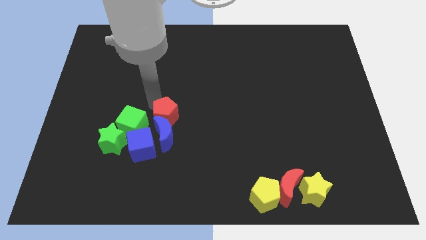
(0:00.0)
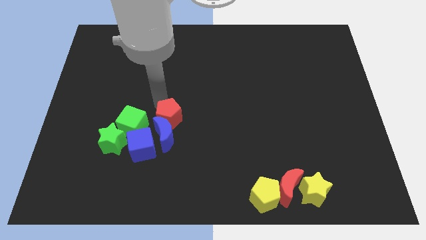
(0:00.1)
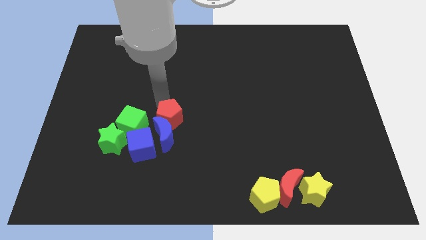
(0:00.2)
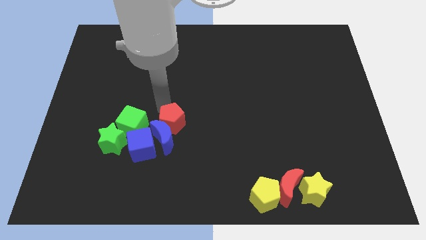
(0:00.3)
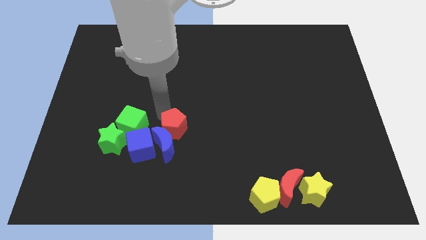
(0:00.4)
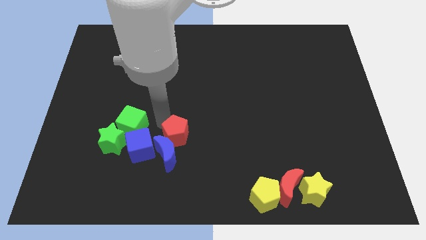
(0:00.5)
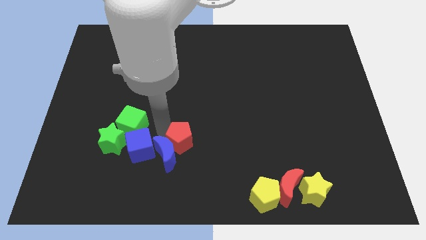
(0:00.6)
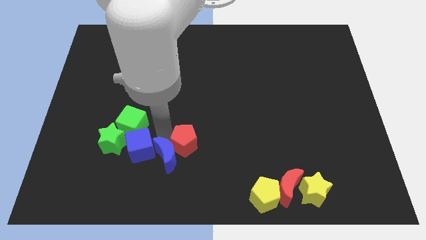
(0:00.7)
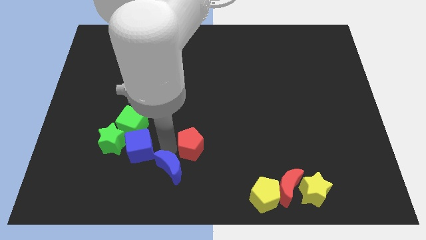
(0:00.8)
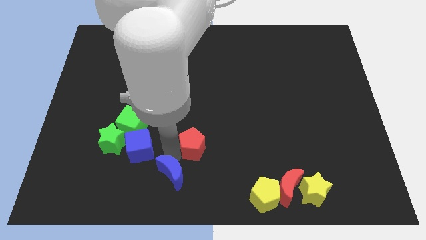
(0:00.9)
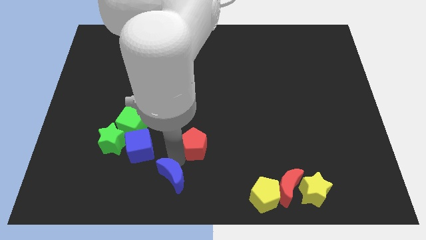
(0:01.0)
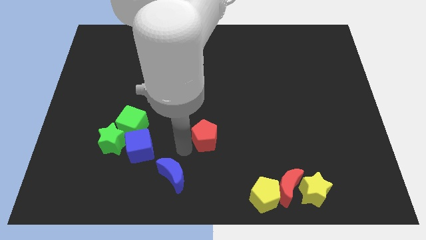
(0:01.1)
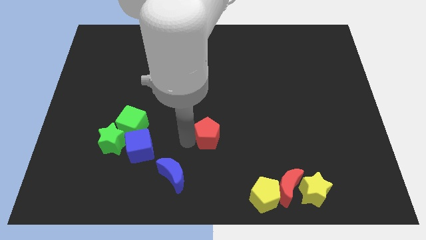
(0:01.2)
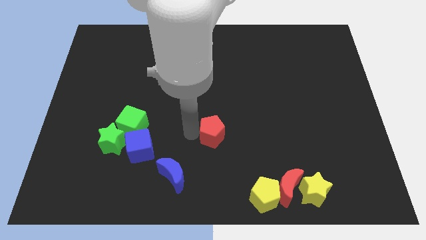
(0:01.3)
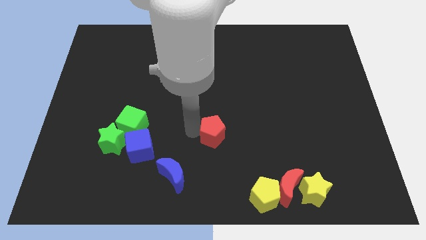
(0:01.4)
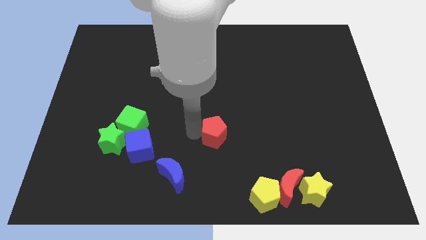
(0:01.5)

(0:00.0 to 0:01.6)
push red pentagon to the bottom center

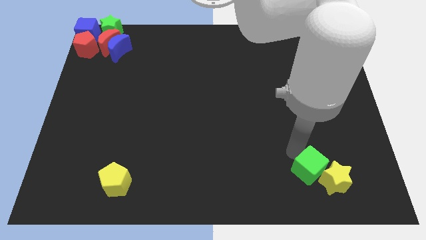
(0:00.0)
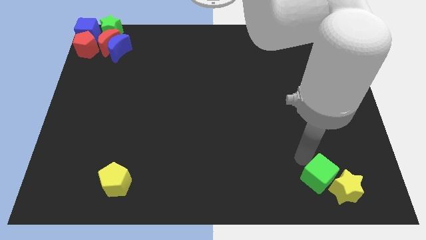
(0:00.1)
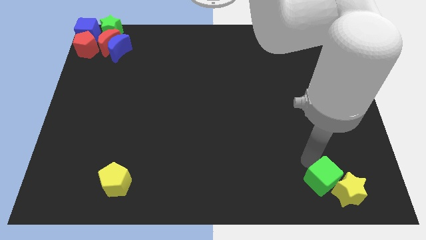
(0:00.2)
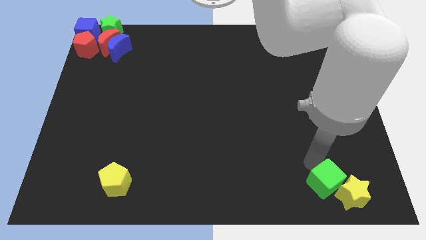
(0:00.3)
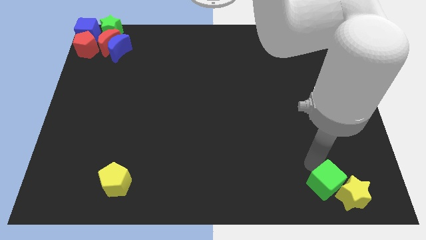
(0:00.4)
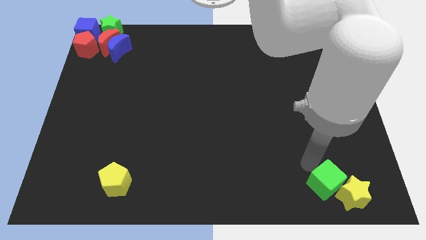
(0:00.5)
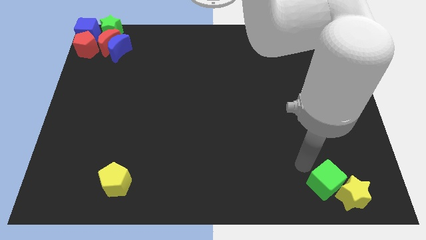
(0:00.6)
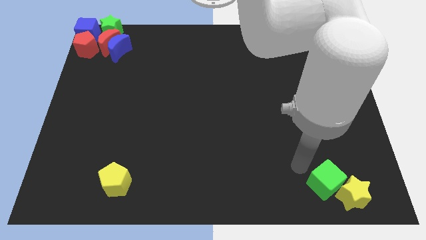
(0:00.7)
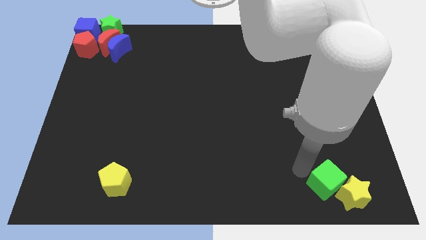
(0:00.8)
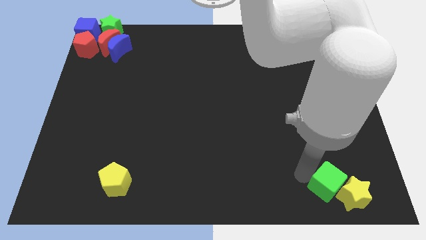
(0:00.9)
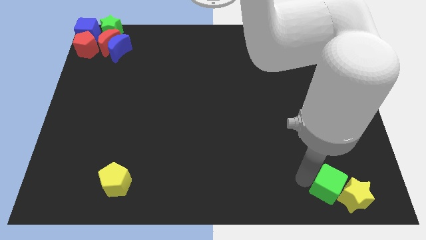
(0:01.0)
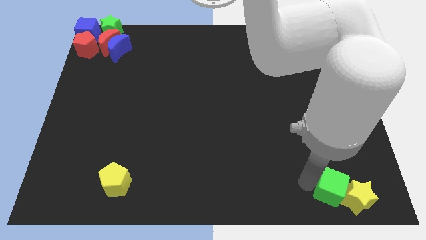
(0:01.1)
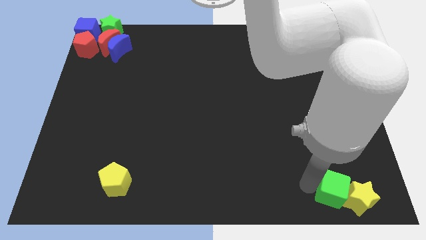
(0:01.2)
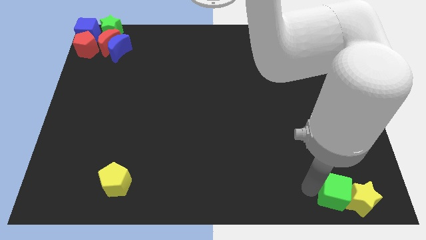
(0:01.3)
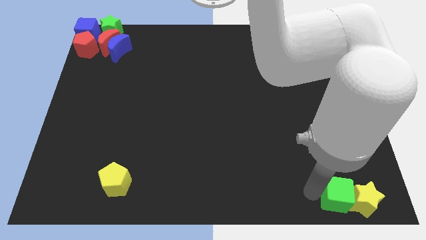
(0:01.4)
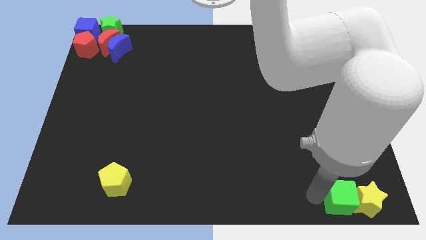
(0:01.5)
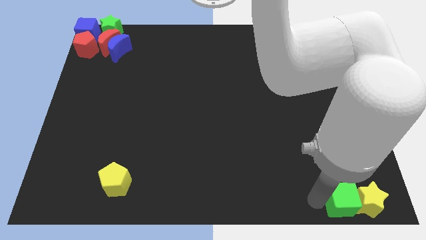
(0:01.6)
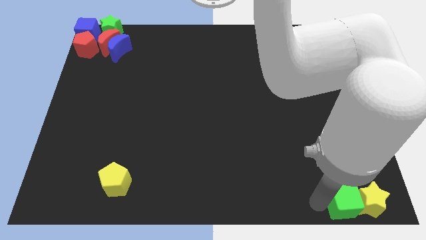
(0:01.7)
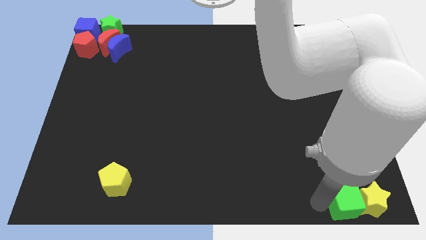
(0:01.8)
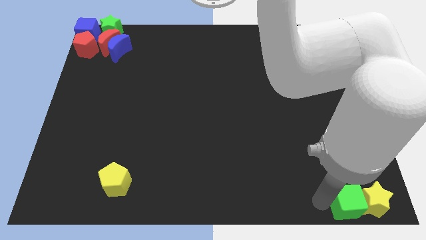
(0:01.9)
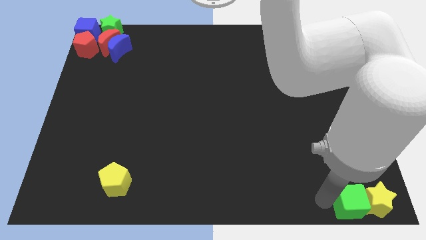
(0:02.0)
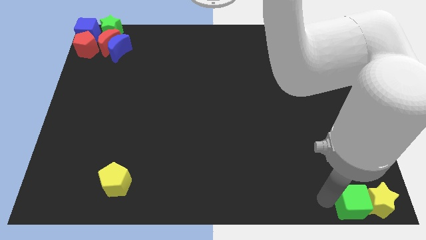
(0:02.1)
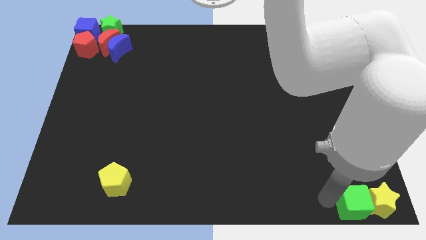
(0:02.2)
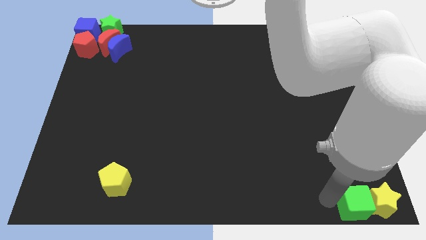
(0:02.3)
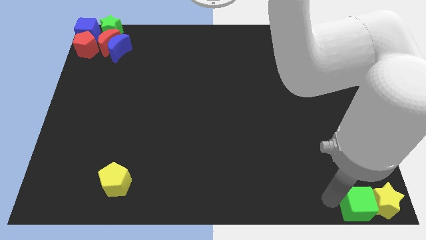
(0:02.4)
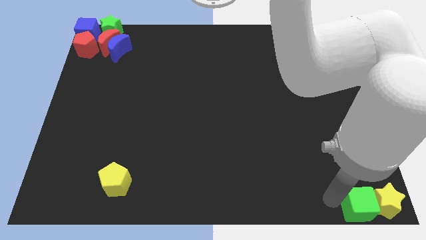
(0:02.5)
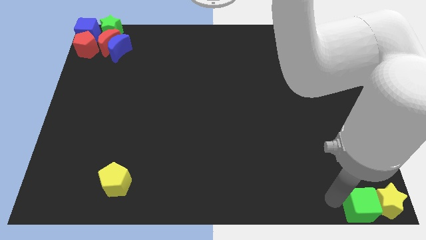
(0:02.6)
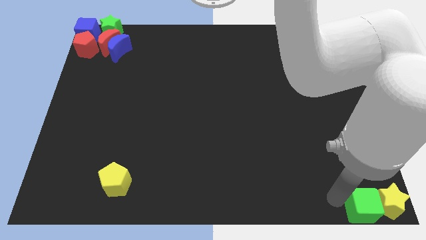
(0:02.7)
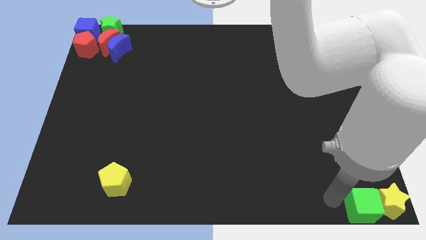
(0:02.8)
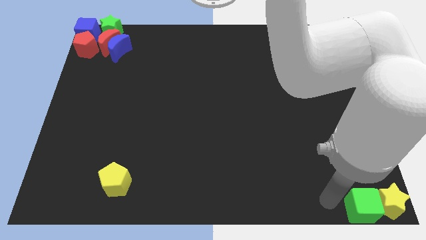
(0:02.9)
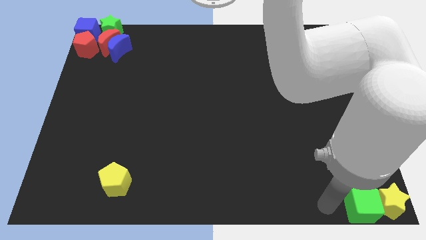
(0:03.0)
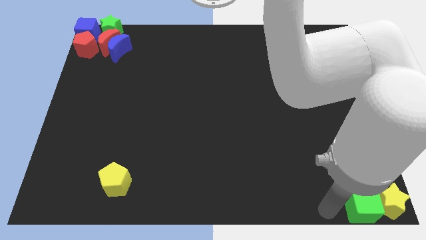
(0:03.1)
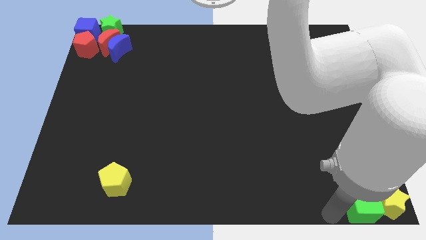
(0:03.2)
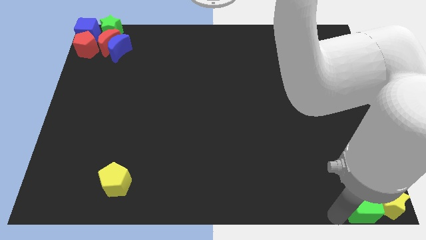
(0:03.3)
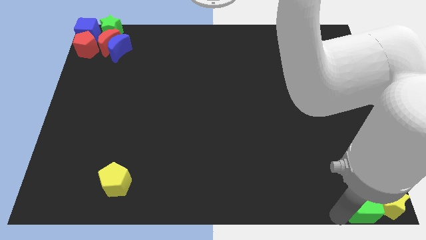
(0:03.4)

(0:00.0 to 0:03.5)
place the green cube and the yellow star at the bottom right corner

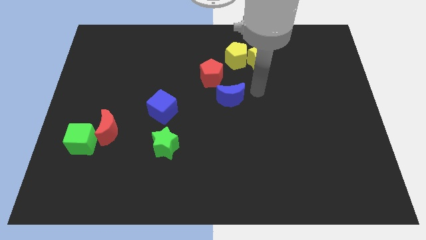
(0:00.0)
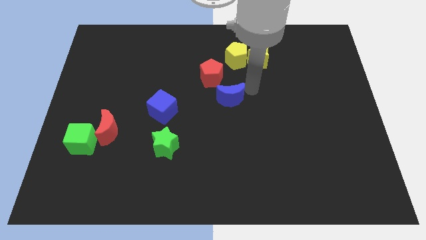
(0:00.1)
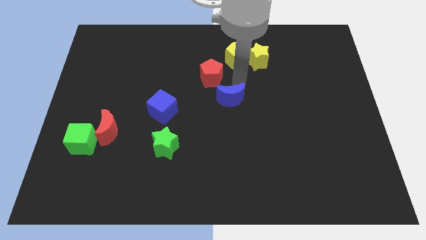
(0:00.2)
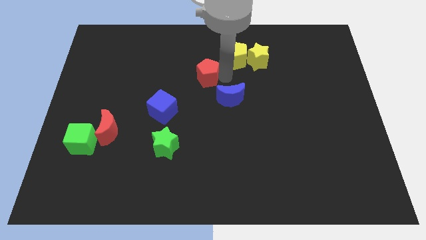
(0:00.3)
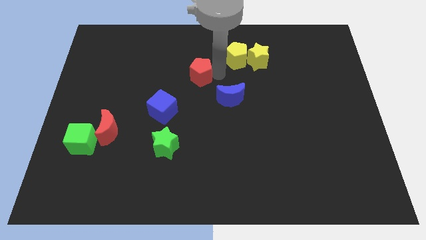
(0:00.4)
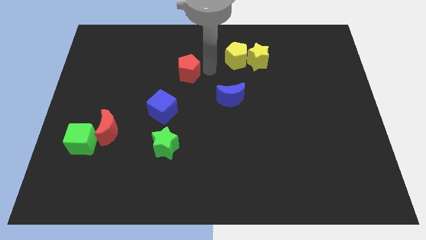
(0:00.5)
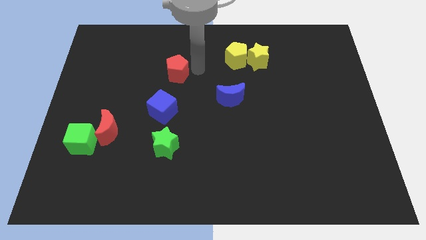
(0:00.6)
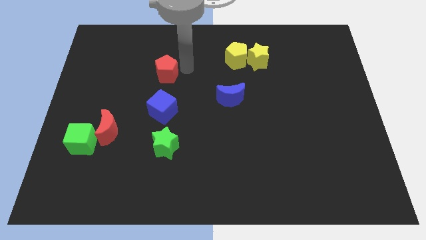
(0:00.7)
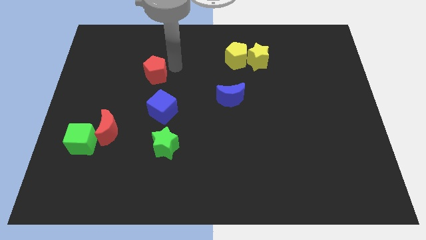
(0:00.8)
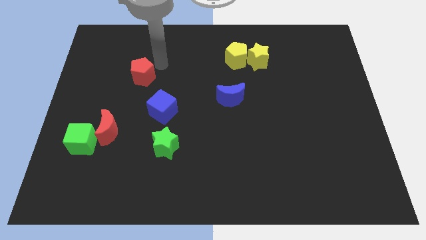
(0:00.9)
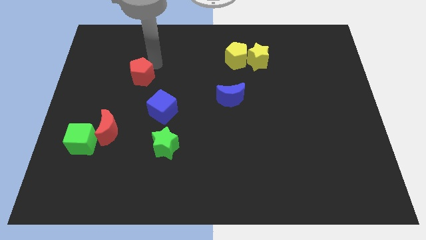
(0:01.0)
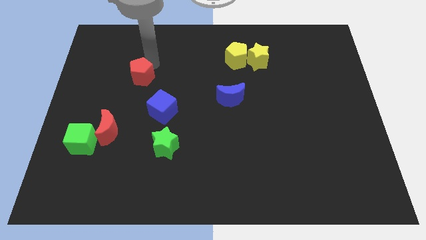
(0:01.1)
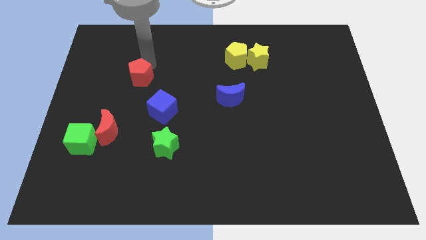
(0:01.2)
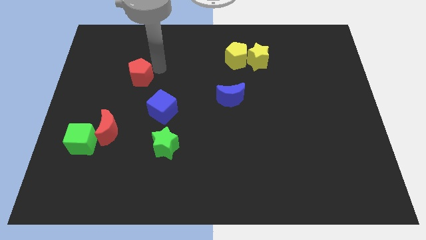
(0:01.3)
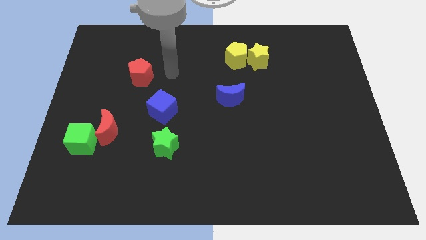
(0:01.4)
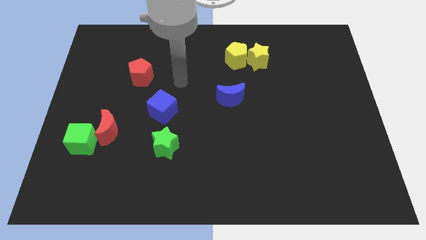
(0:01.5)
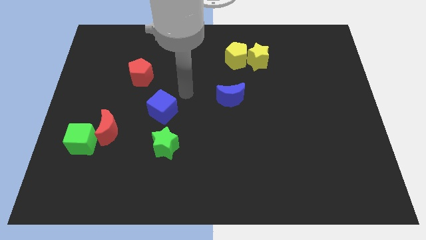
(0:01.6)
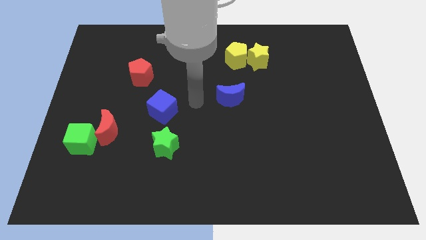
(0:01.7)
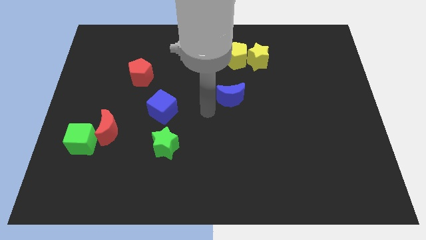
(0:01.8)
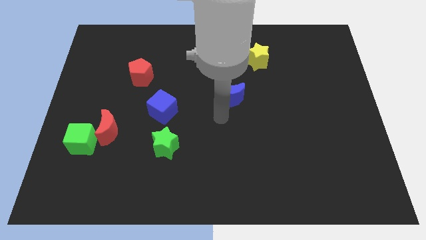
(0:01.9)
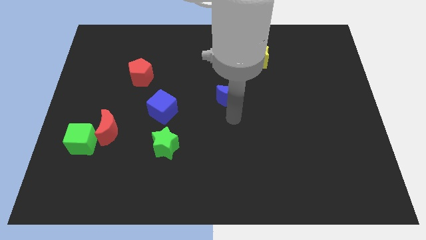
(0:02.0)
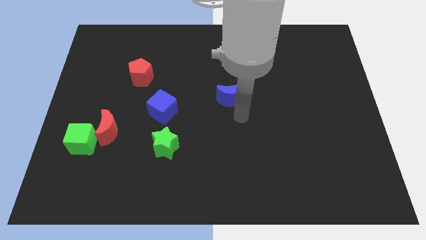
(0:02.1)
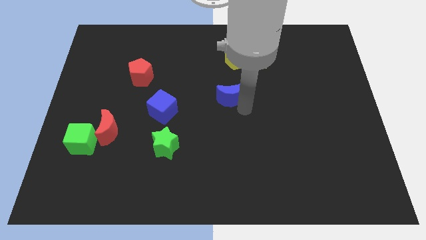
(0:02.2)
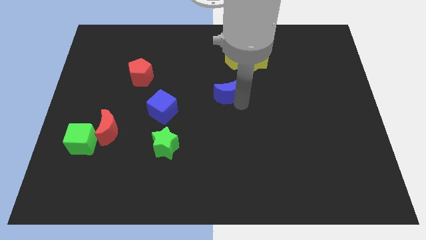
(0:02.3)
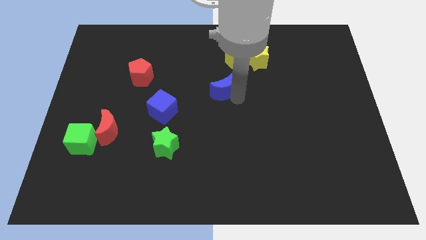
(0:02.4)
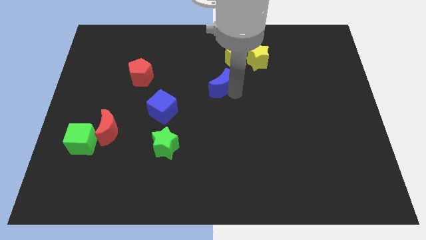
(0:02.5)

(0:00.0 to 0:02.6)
separate the red pentagon from the blue moon

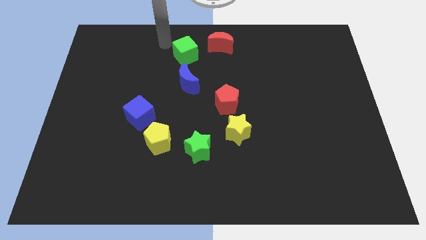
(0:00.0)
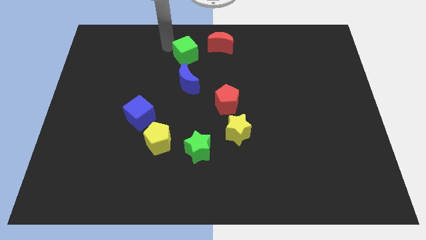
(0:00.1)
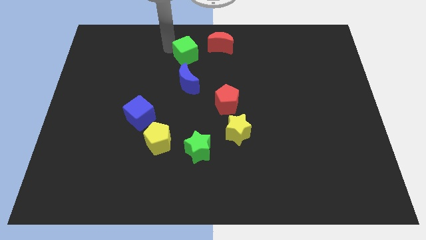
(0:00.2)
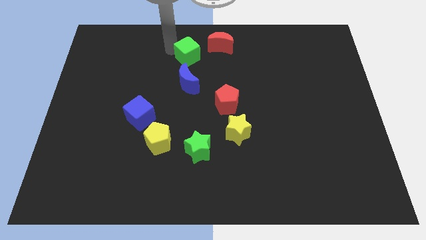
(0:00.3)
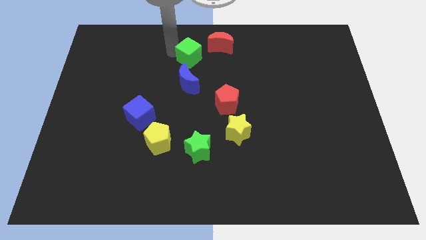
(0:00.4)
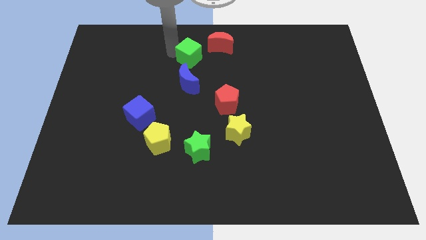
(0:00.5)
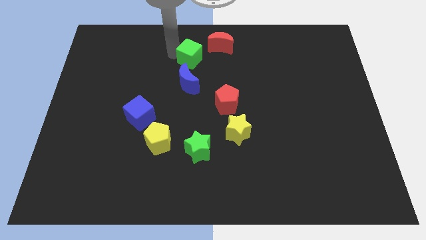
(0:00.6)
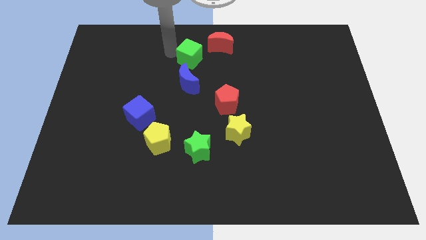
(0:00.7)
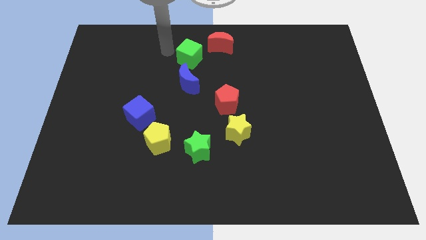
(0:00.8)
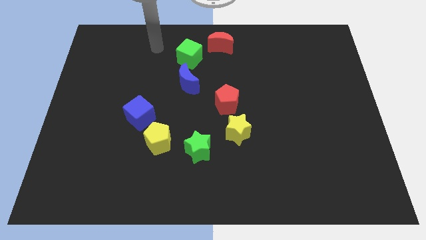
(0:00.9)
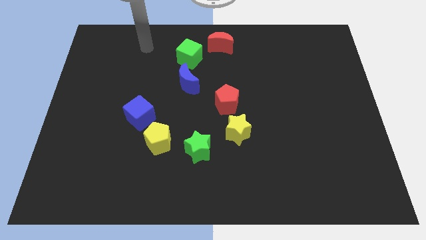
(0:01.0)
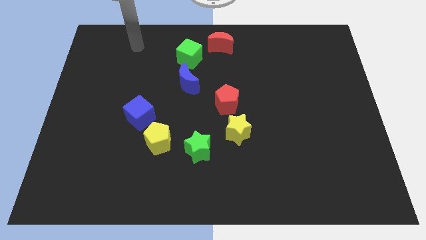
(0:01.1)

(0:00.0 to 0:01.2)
move green cube slightly towards the top of blue crescent
